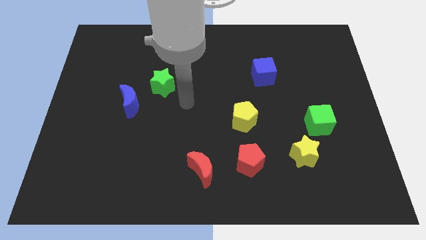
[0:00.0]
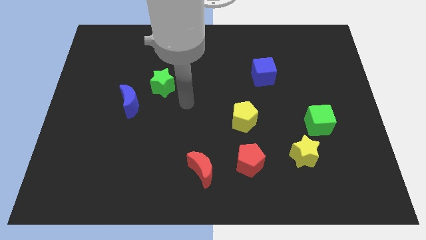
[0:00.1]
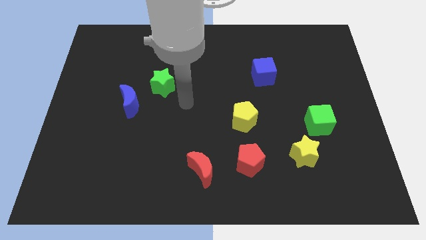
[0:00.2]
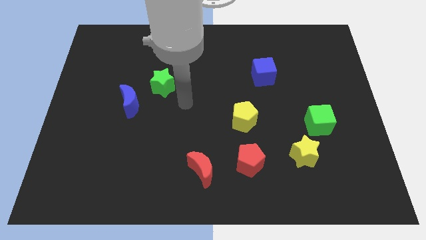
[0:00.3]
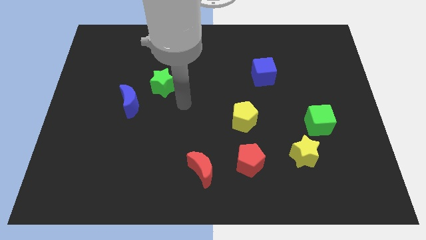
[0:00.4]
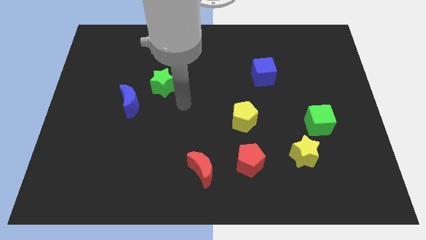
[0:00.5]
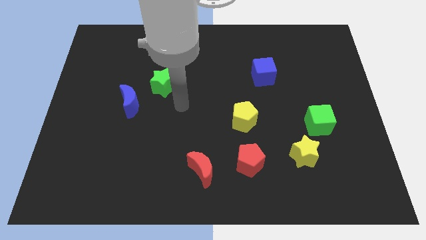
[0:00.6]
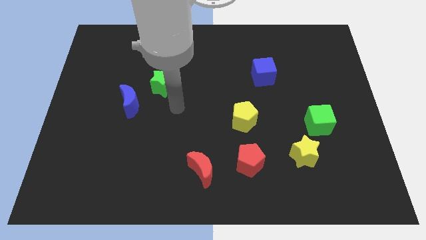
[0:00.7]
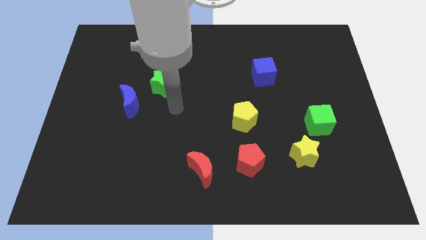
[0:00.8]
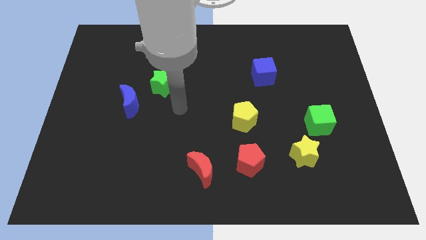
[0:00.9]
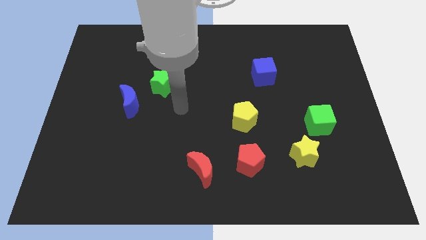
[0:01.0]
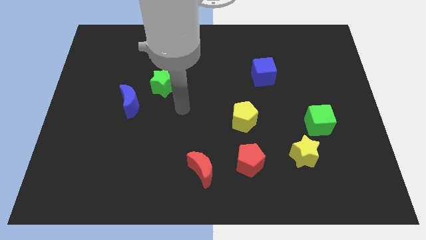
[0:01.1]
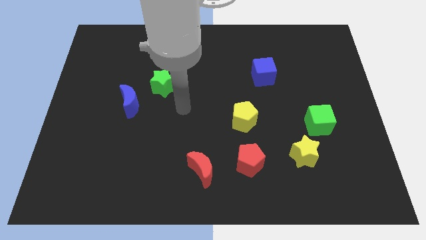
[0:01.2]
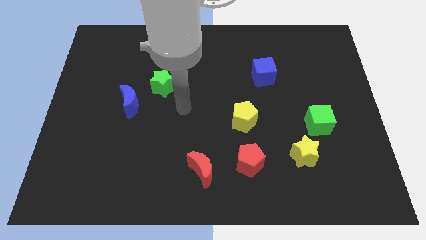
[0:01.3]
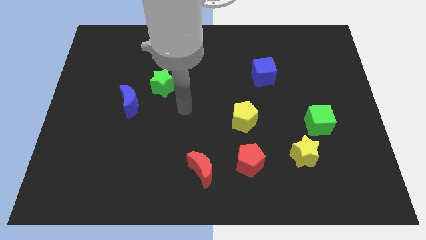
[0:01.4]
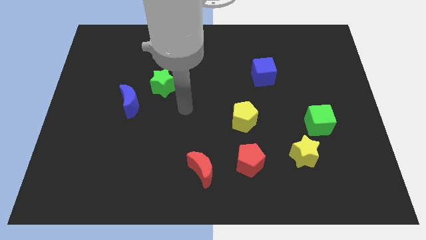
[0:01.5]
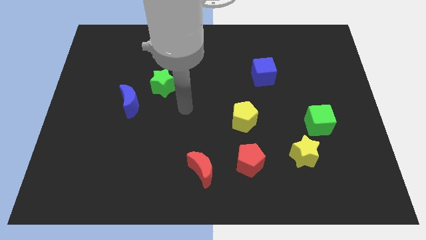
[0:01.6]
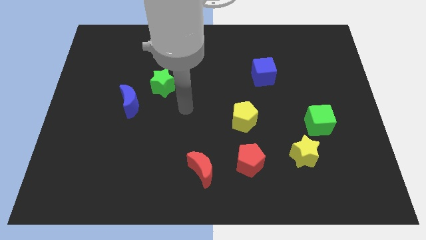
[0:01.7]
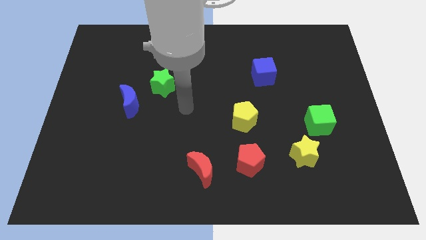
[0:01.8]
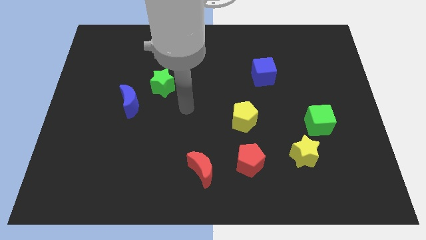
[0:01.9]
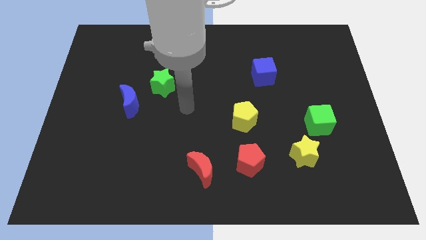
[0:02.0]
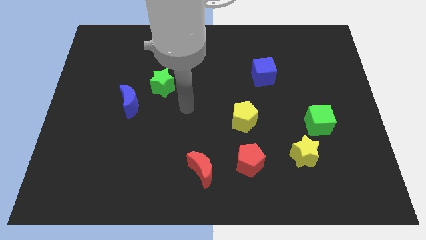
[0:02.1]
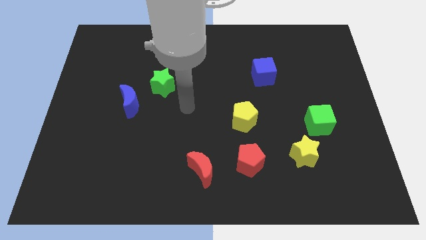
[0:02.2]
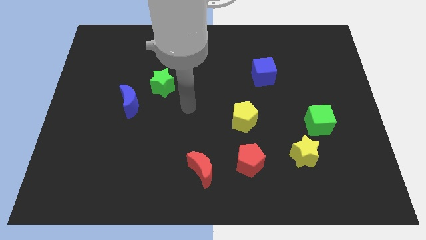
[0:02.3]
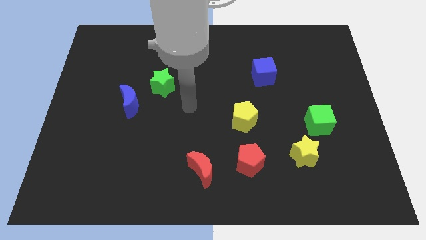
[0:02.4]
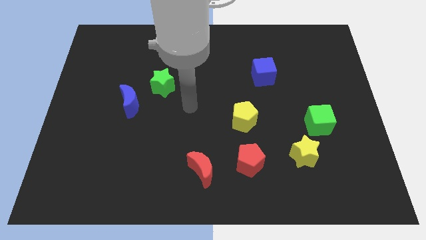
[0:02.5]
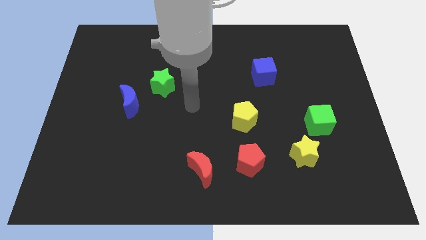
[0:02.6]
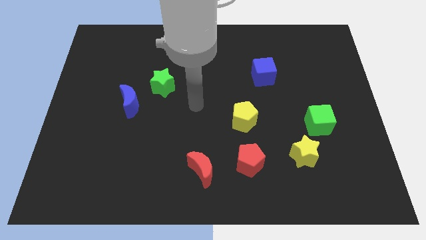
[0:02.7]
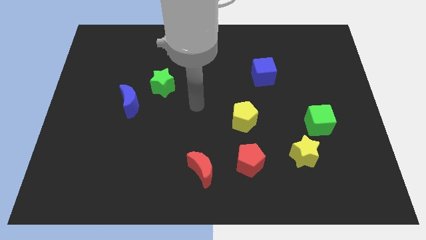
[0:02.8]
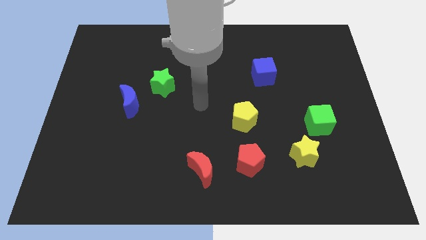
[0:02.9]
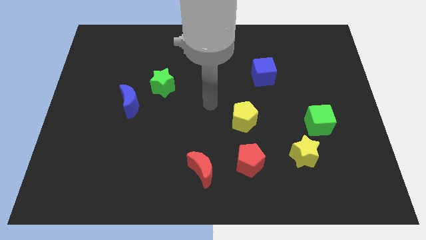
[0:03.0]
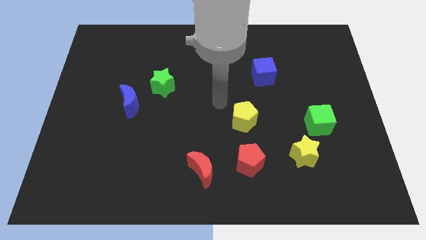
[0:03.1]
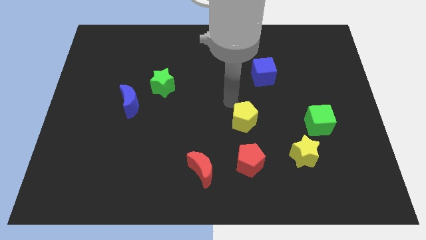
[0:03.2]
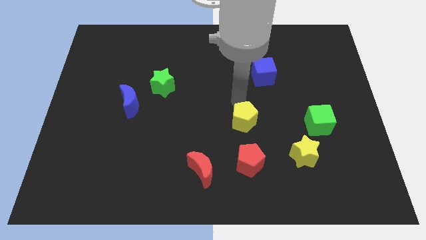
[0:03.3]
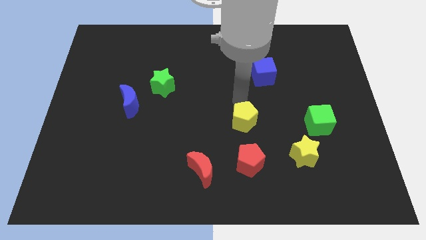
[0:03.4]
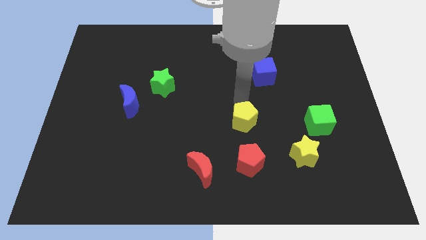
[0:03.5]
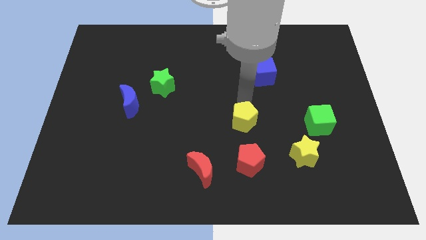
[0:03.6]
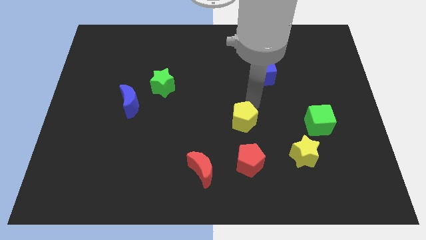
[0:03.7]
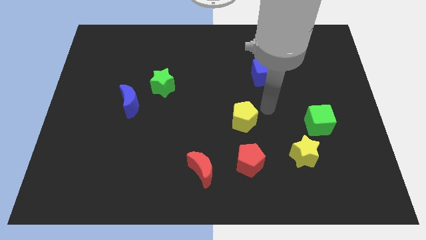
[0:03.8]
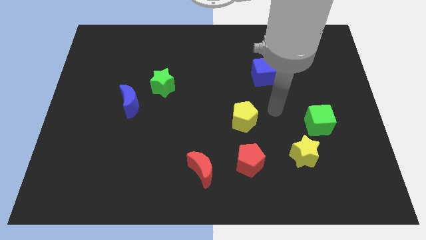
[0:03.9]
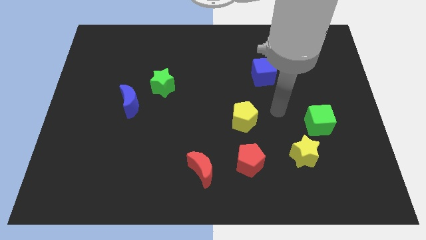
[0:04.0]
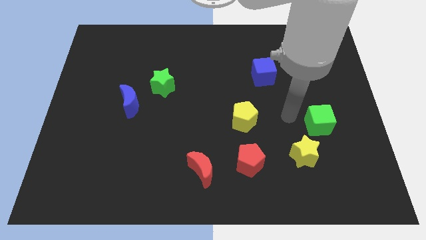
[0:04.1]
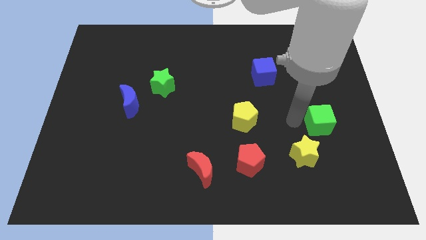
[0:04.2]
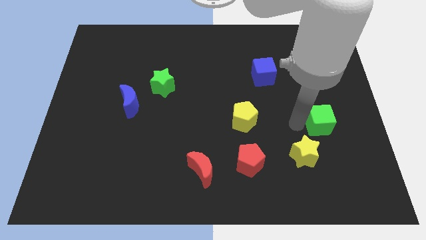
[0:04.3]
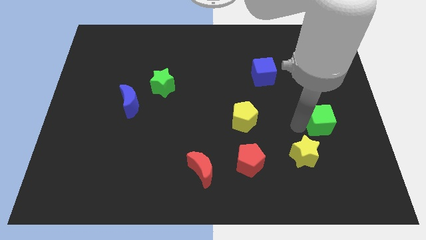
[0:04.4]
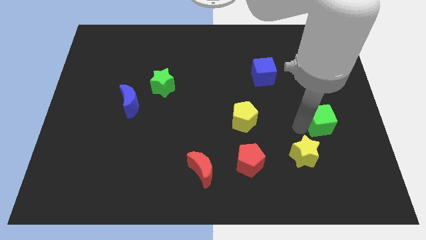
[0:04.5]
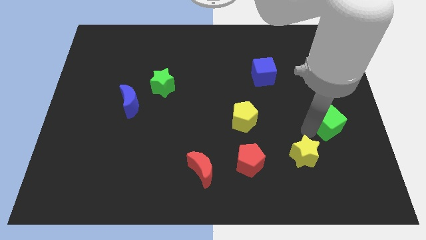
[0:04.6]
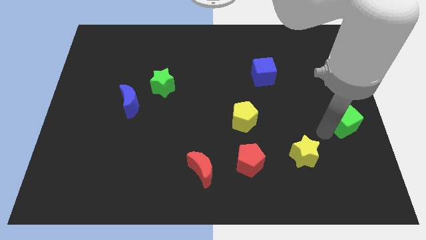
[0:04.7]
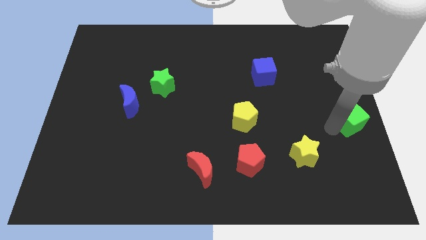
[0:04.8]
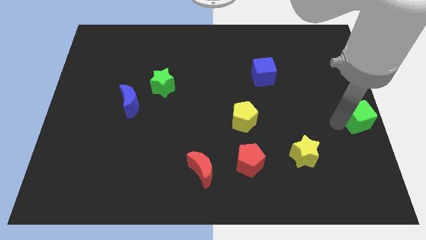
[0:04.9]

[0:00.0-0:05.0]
push the green cube to the center right side of the board

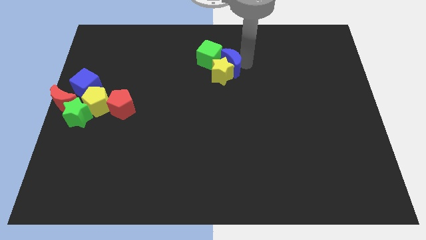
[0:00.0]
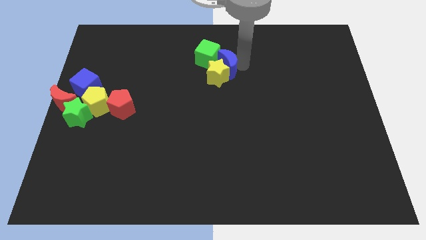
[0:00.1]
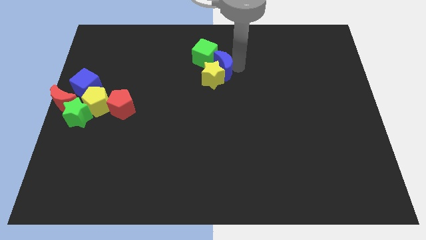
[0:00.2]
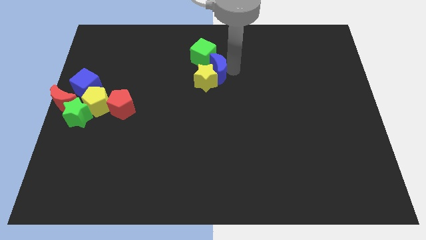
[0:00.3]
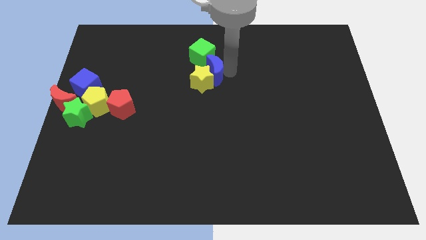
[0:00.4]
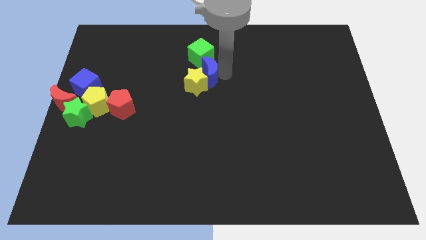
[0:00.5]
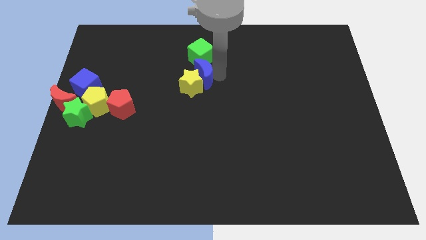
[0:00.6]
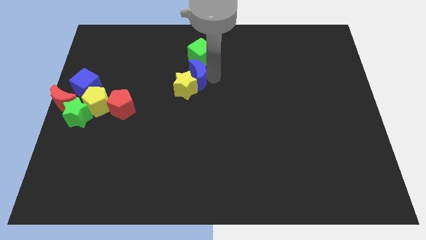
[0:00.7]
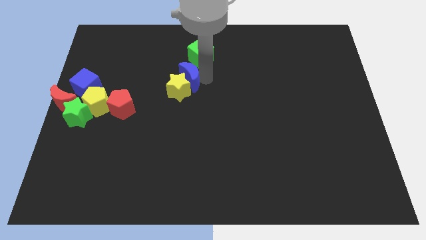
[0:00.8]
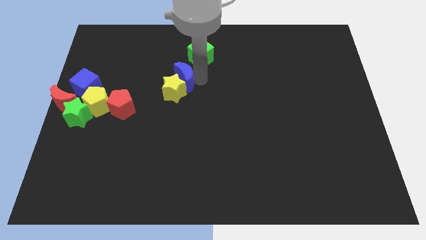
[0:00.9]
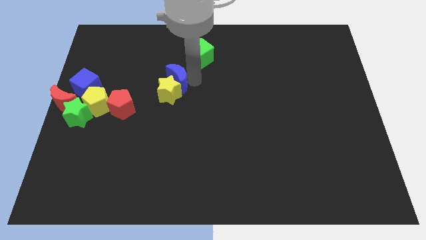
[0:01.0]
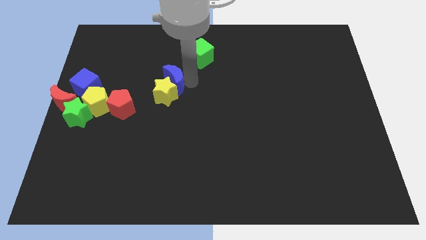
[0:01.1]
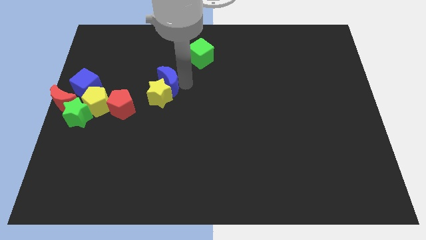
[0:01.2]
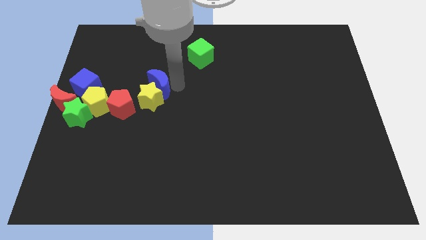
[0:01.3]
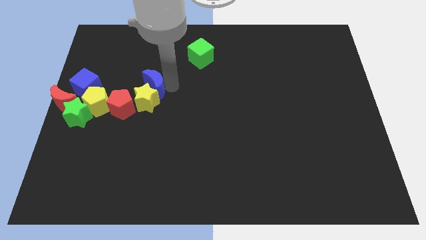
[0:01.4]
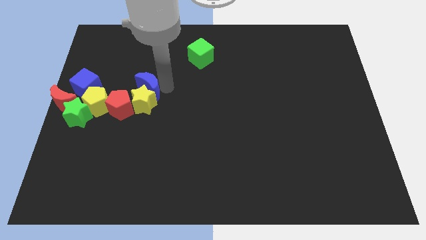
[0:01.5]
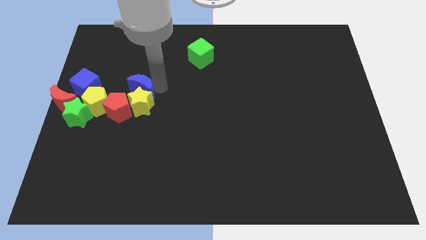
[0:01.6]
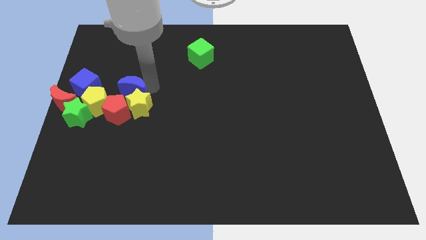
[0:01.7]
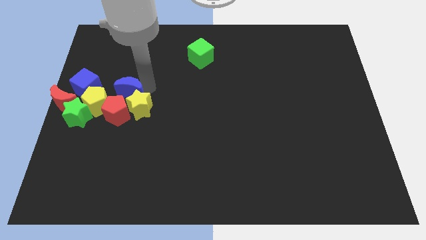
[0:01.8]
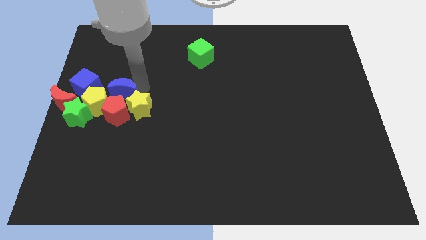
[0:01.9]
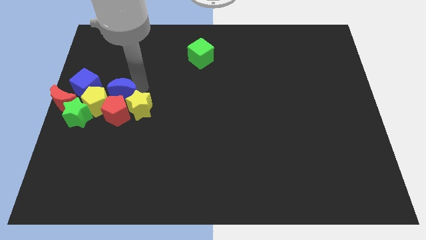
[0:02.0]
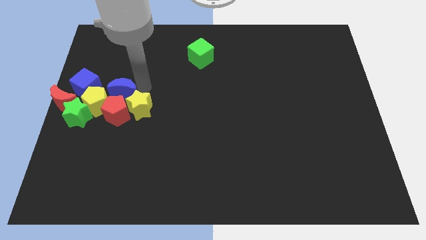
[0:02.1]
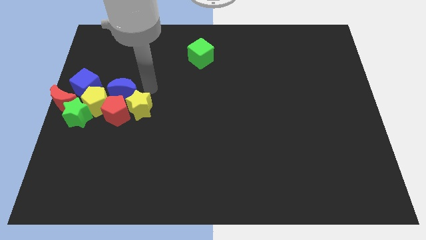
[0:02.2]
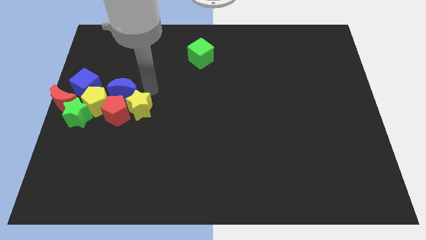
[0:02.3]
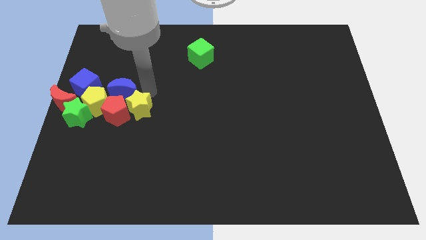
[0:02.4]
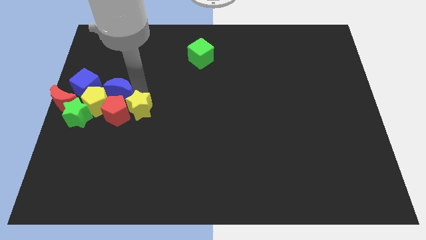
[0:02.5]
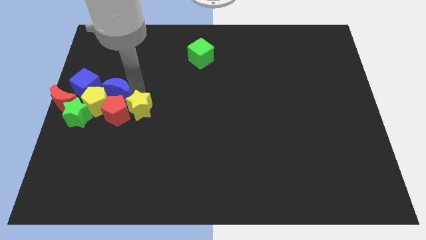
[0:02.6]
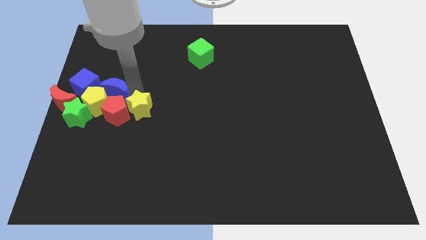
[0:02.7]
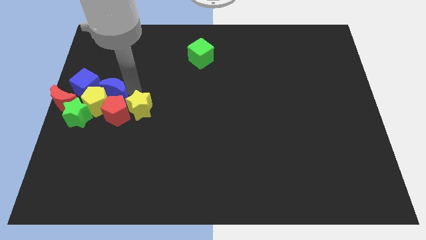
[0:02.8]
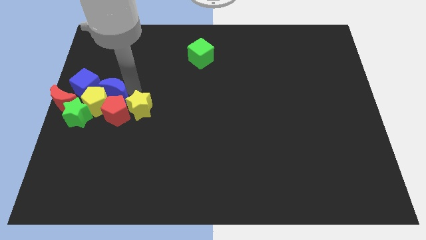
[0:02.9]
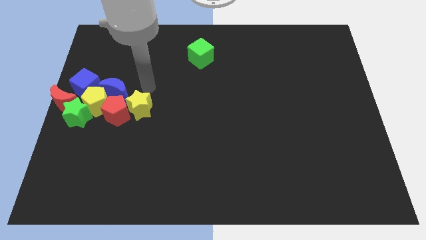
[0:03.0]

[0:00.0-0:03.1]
slide the blue moon and yellow star into the group of blocks

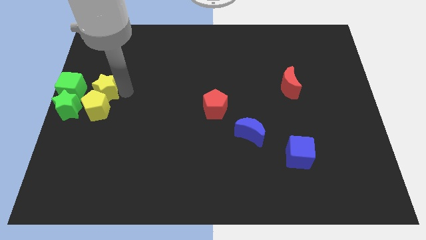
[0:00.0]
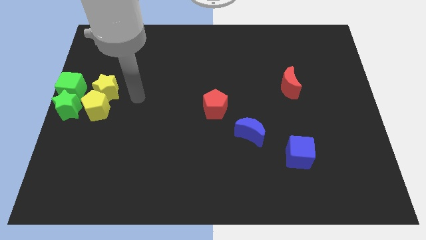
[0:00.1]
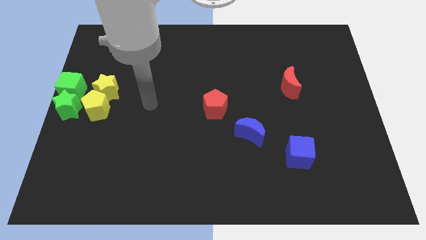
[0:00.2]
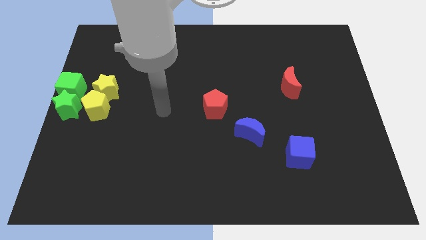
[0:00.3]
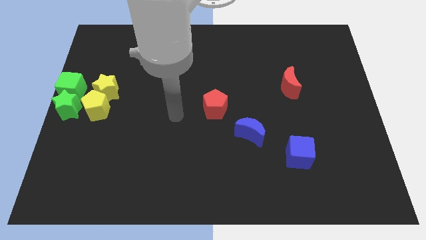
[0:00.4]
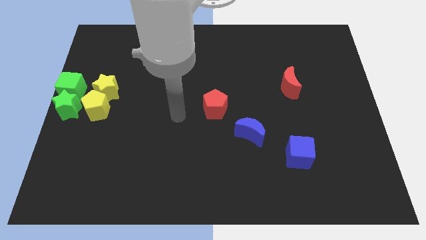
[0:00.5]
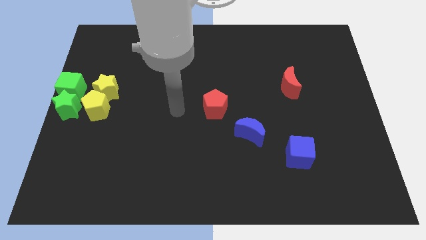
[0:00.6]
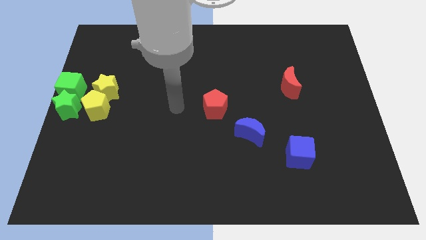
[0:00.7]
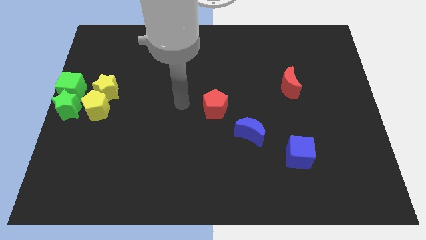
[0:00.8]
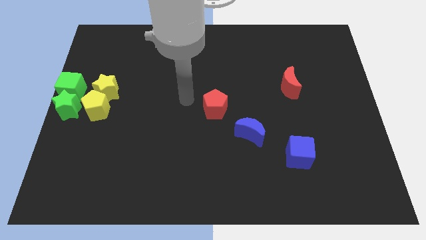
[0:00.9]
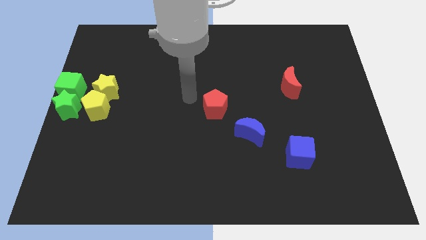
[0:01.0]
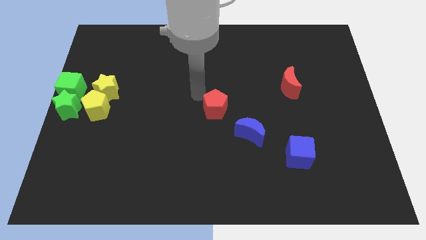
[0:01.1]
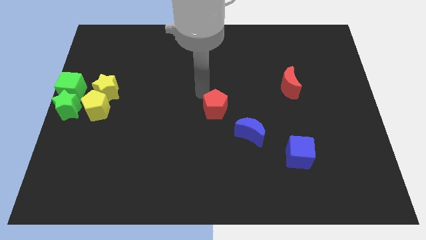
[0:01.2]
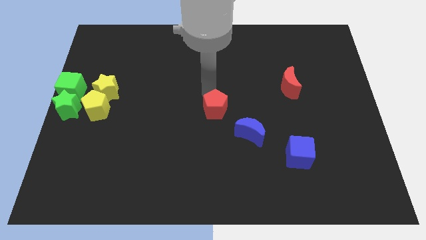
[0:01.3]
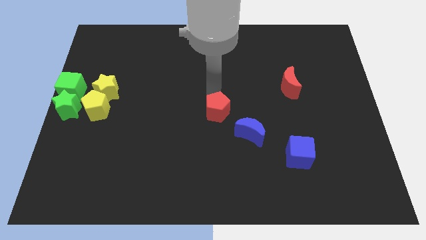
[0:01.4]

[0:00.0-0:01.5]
point your arm above red pentagon
